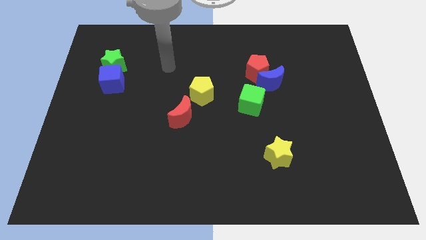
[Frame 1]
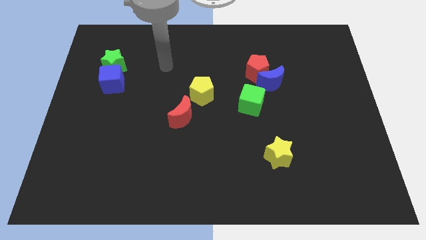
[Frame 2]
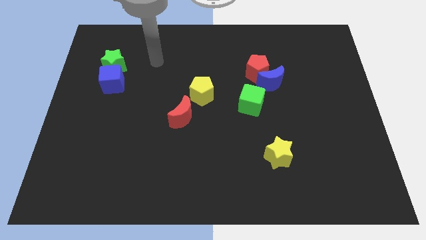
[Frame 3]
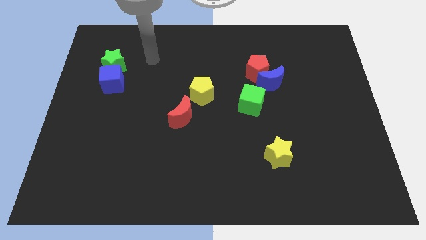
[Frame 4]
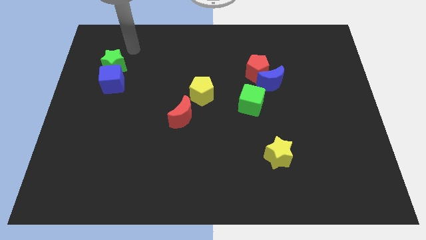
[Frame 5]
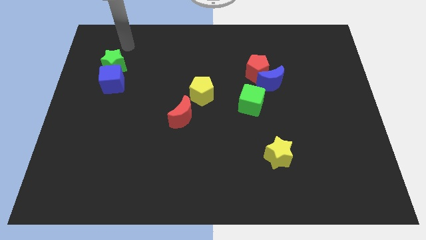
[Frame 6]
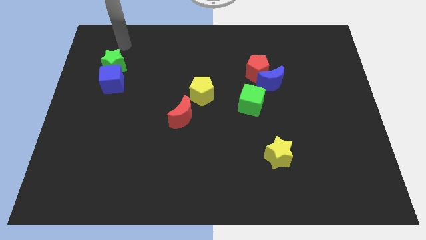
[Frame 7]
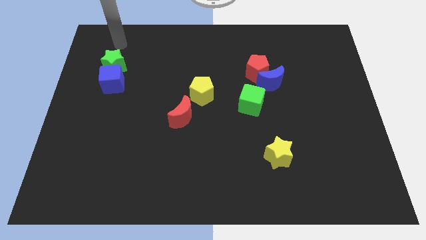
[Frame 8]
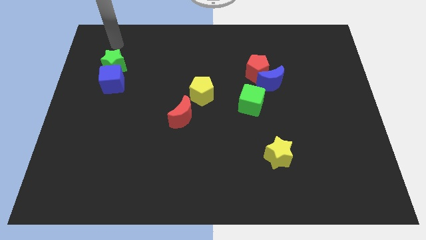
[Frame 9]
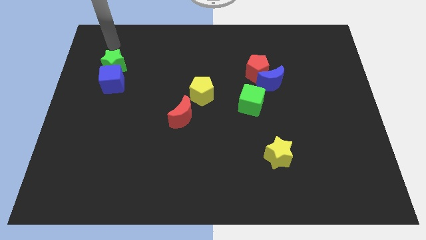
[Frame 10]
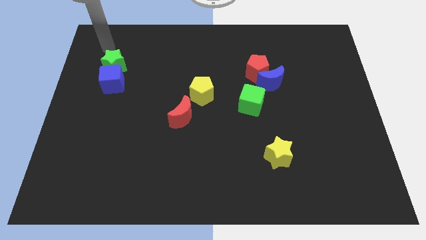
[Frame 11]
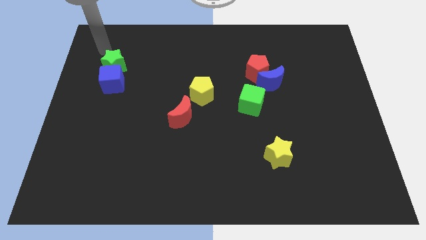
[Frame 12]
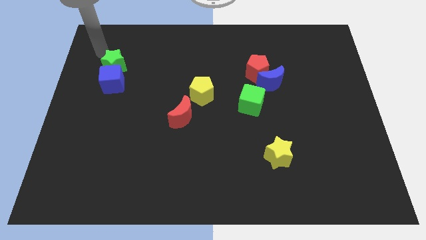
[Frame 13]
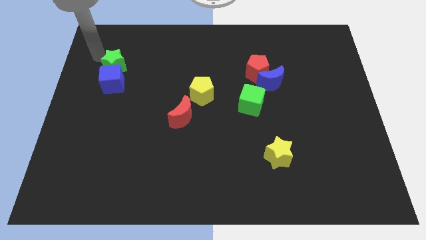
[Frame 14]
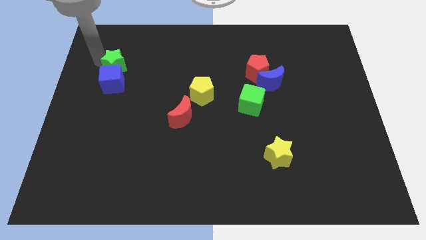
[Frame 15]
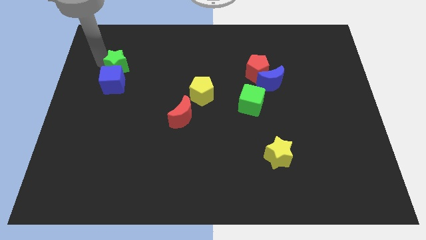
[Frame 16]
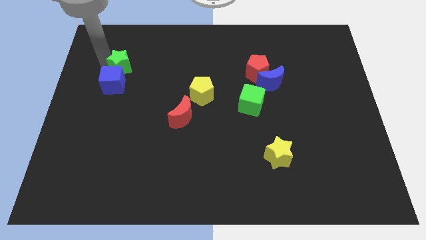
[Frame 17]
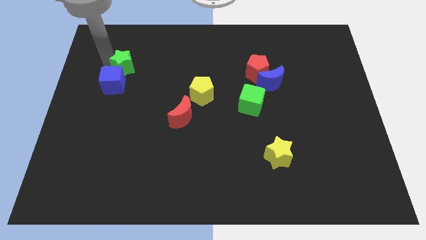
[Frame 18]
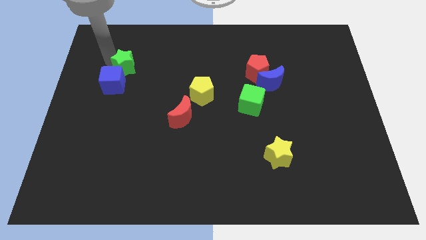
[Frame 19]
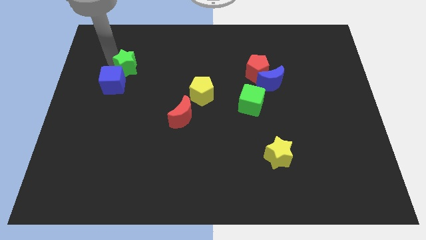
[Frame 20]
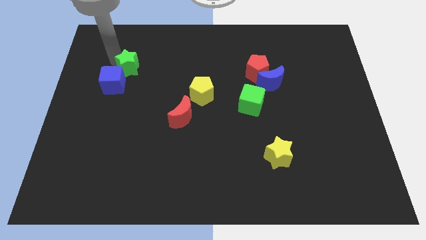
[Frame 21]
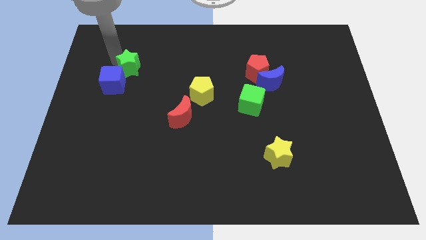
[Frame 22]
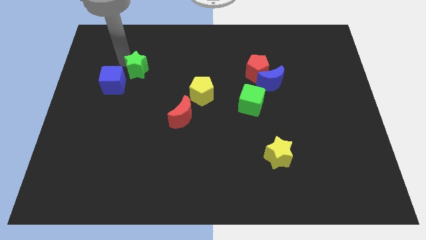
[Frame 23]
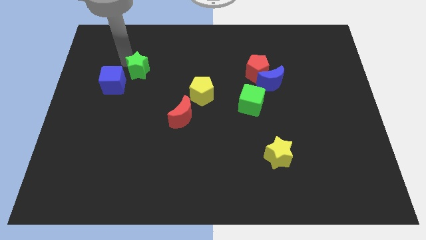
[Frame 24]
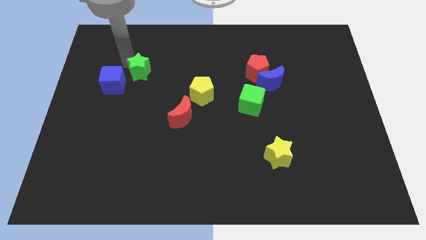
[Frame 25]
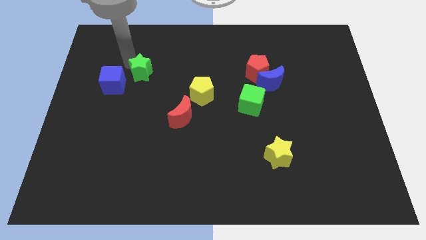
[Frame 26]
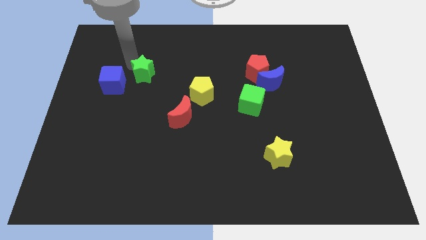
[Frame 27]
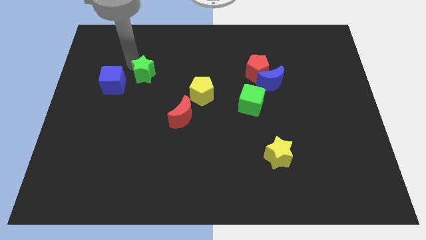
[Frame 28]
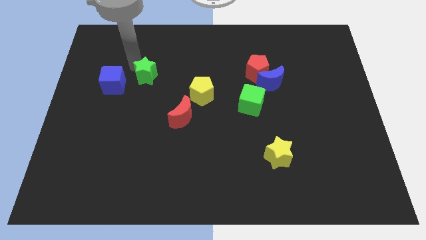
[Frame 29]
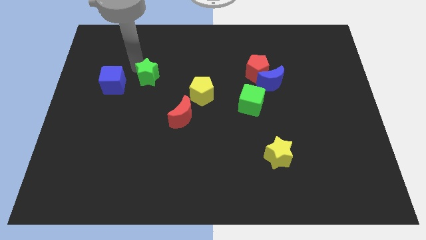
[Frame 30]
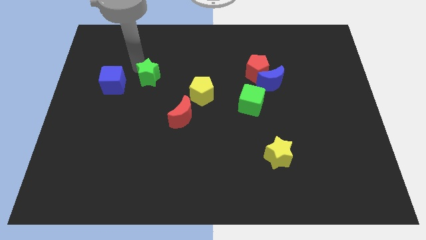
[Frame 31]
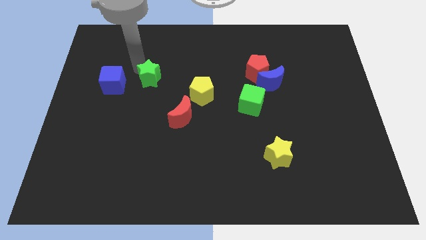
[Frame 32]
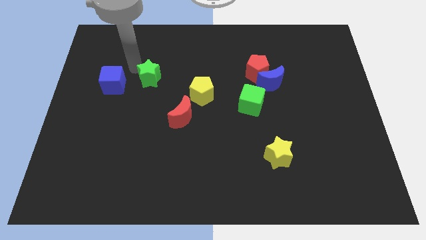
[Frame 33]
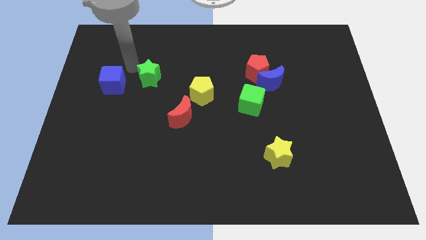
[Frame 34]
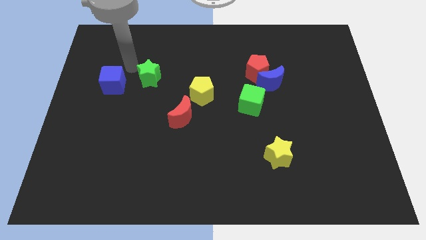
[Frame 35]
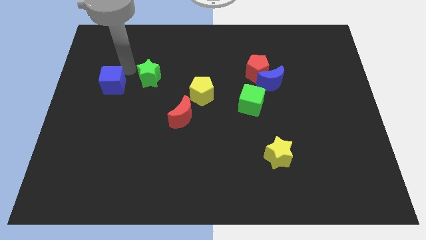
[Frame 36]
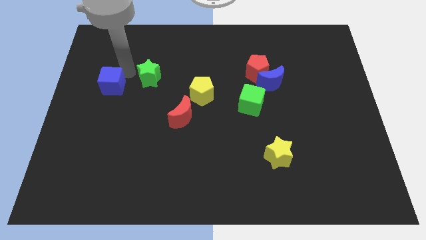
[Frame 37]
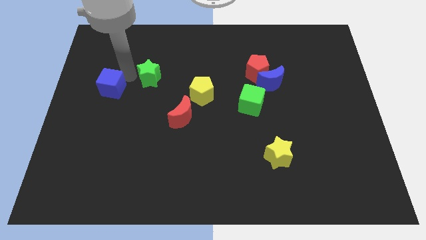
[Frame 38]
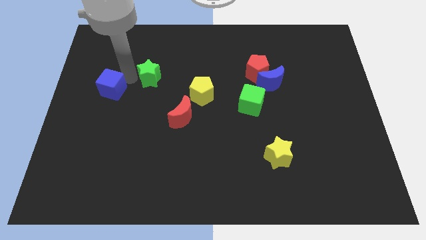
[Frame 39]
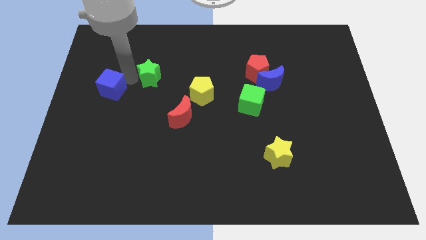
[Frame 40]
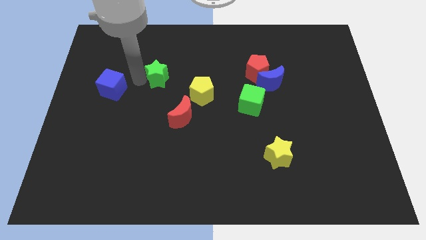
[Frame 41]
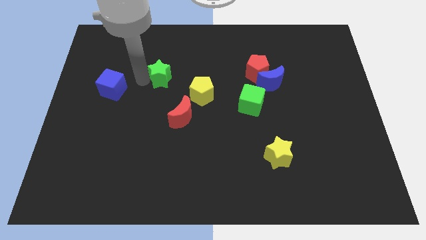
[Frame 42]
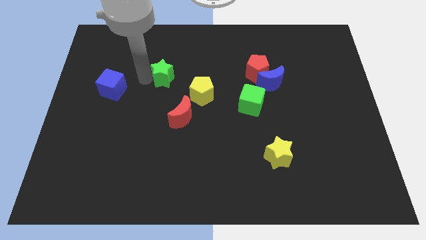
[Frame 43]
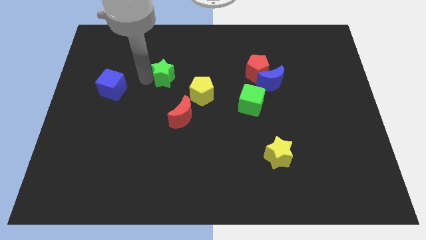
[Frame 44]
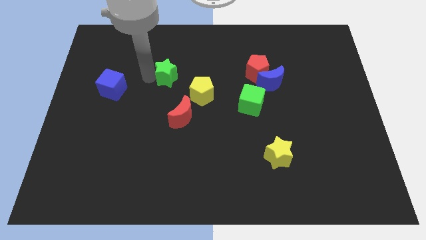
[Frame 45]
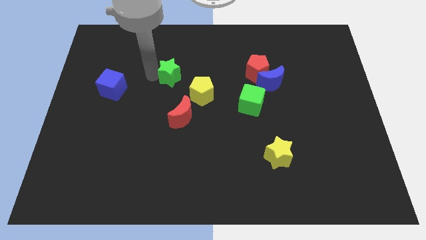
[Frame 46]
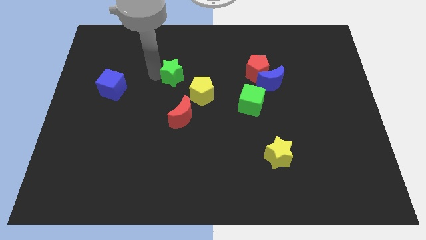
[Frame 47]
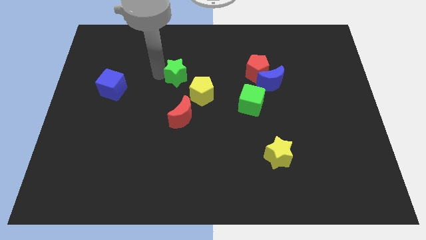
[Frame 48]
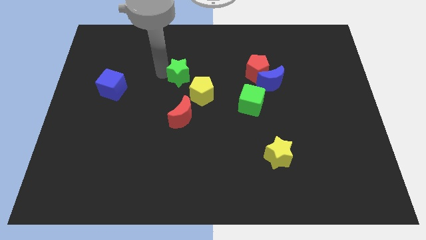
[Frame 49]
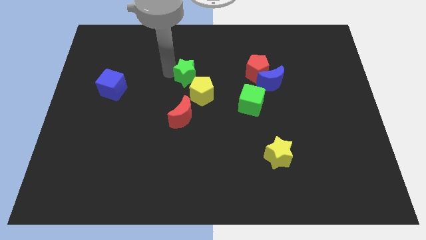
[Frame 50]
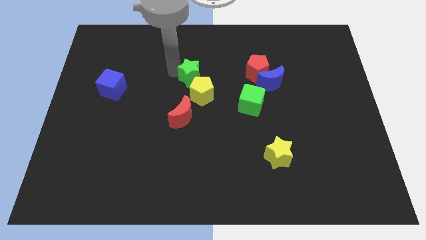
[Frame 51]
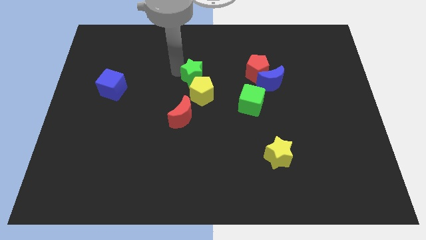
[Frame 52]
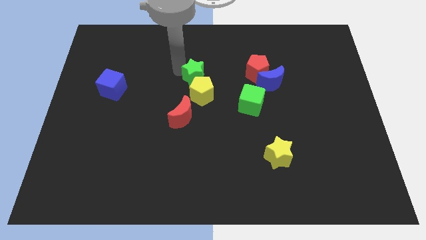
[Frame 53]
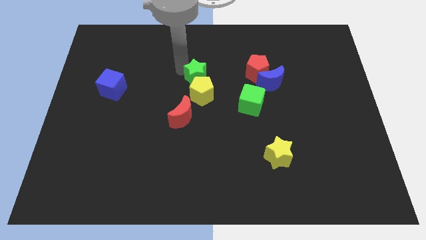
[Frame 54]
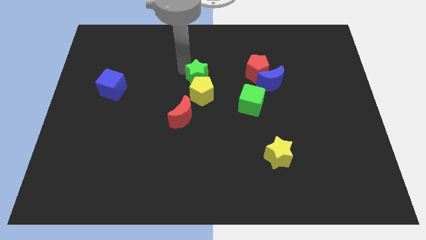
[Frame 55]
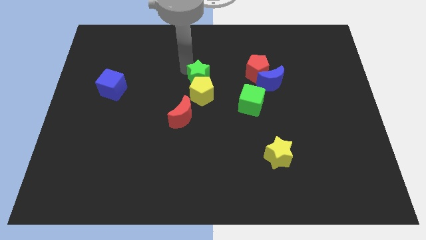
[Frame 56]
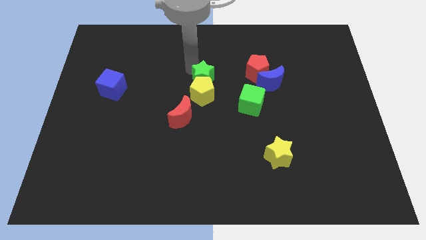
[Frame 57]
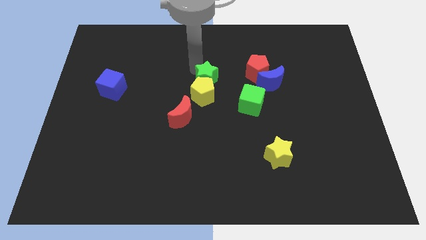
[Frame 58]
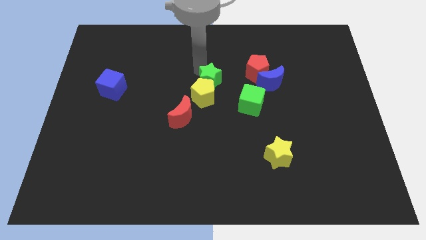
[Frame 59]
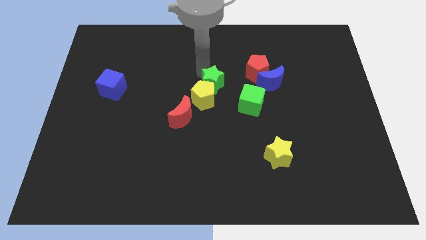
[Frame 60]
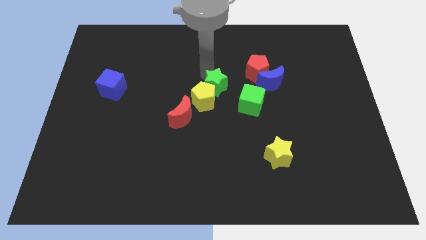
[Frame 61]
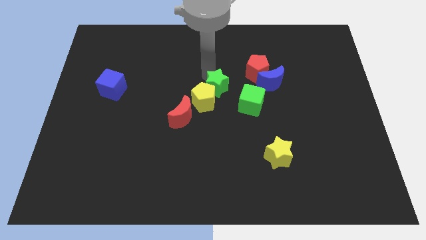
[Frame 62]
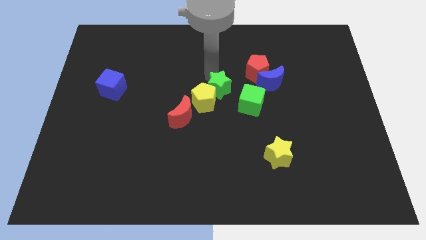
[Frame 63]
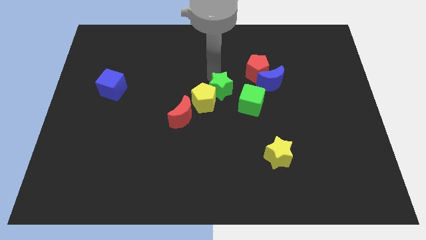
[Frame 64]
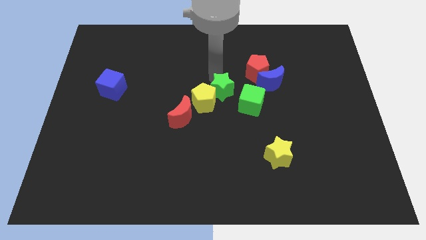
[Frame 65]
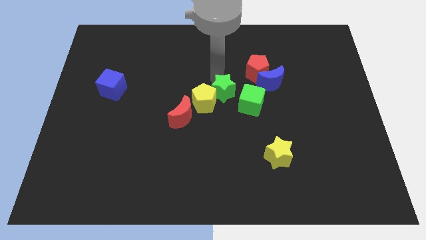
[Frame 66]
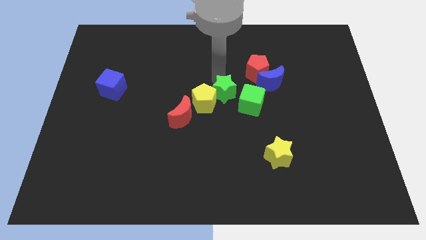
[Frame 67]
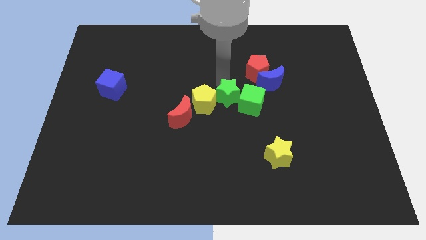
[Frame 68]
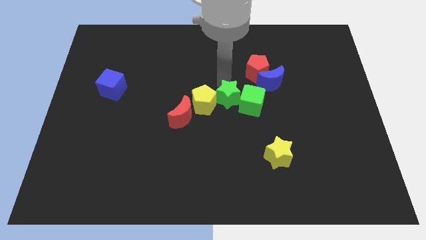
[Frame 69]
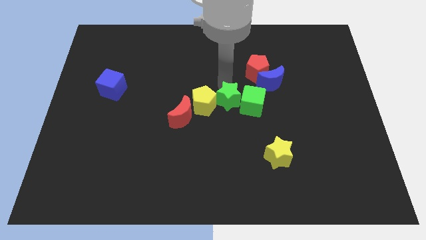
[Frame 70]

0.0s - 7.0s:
put the green star close to the green cube

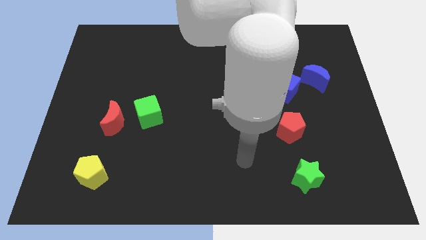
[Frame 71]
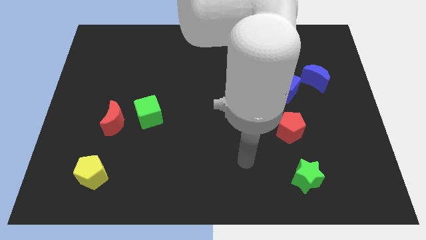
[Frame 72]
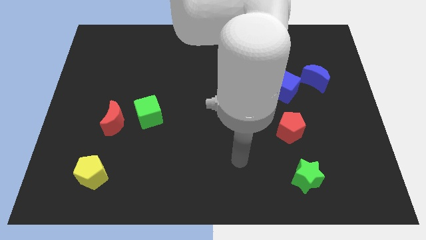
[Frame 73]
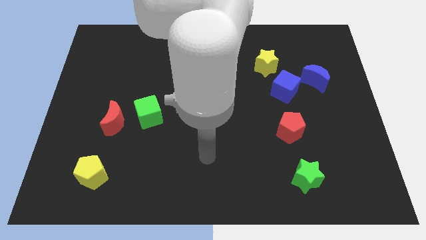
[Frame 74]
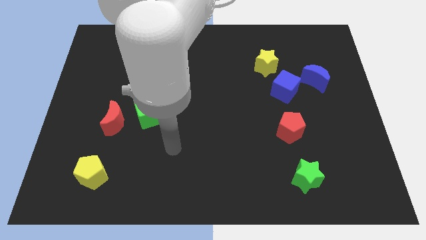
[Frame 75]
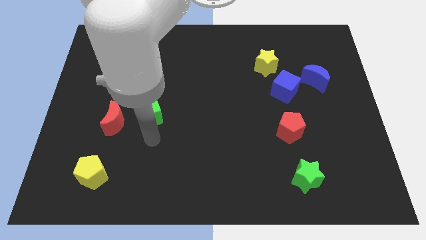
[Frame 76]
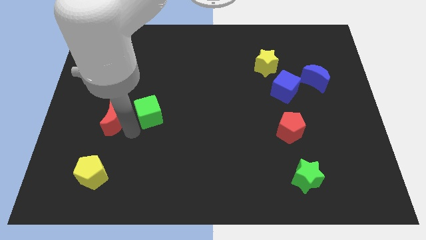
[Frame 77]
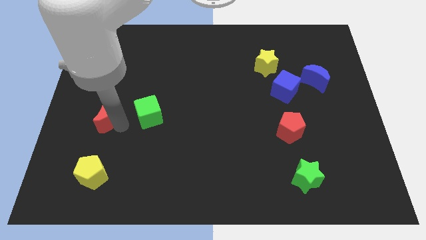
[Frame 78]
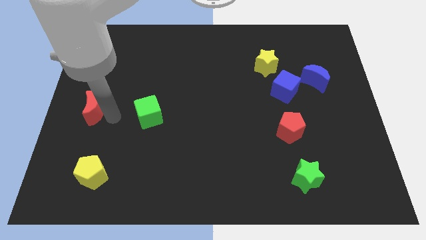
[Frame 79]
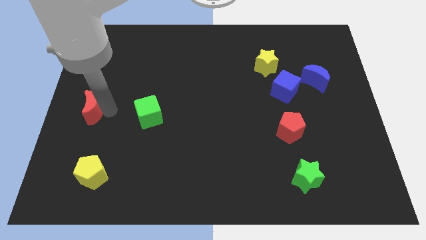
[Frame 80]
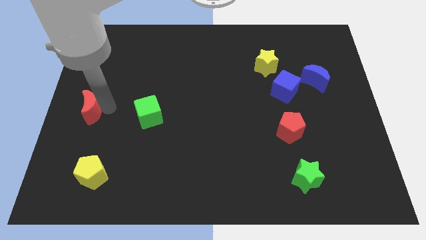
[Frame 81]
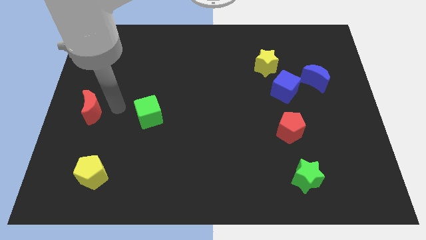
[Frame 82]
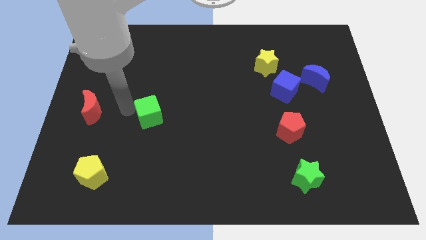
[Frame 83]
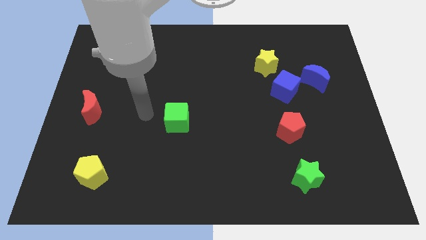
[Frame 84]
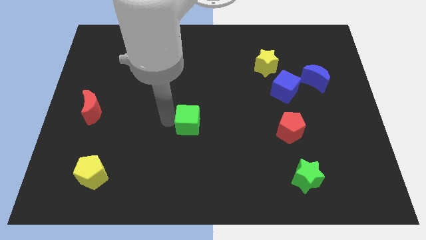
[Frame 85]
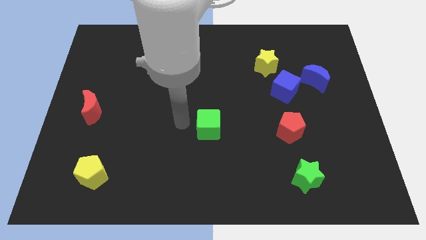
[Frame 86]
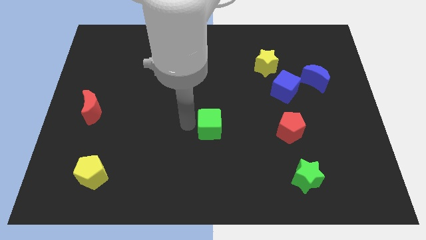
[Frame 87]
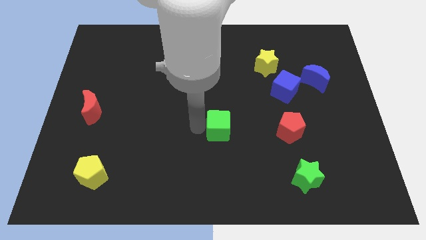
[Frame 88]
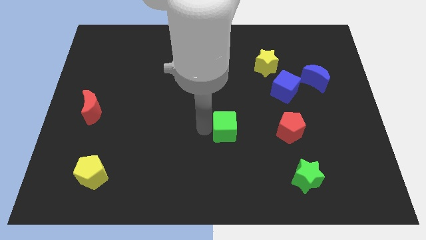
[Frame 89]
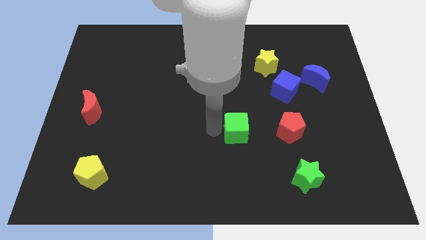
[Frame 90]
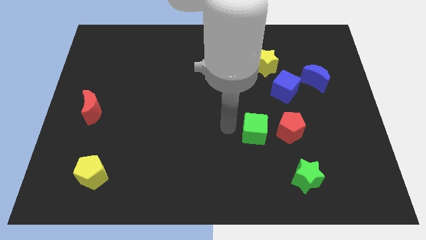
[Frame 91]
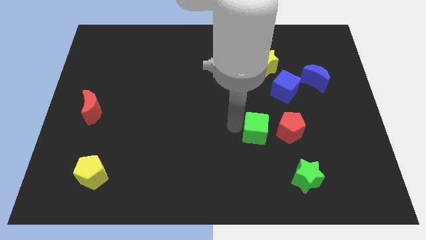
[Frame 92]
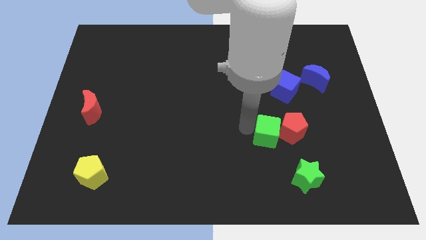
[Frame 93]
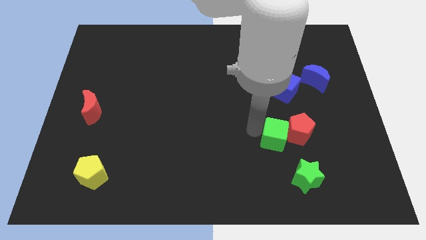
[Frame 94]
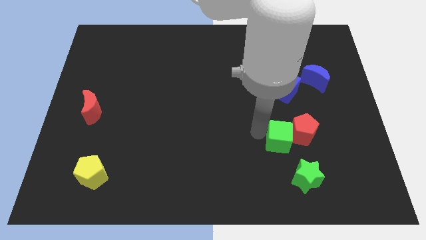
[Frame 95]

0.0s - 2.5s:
slide the green cube to the red pentagon
